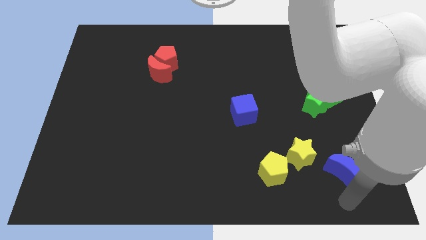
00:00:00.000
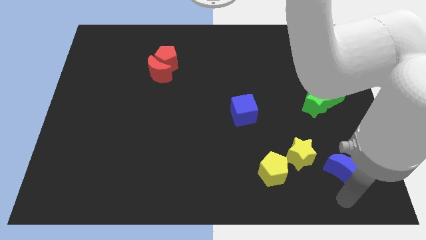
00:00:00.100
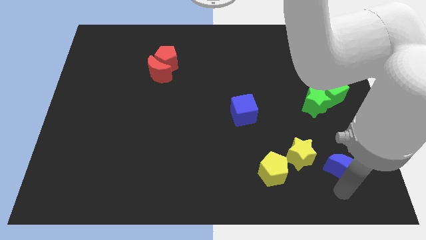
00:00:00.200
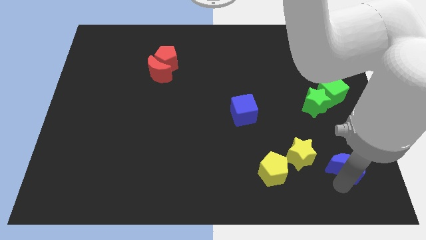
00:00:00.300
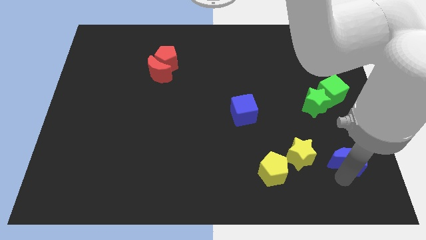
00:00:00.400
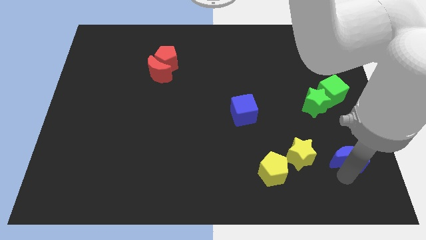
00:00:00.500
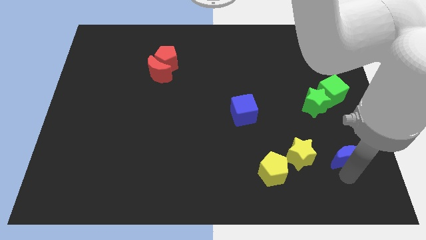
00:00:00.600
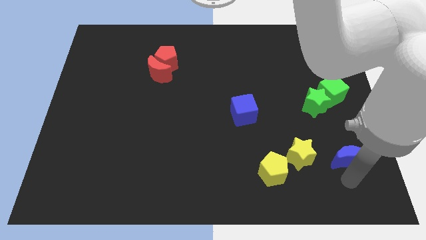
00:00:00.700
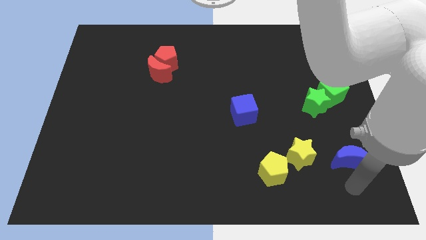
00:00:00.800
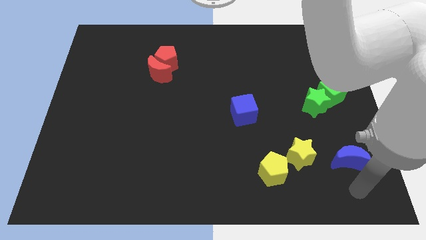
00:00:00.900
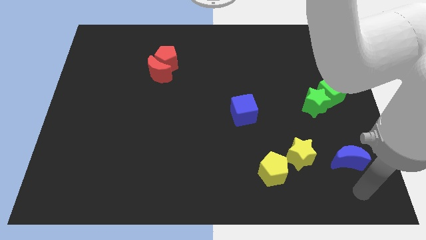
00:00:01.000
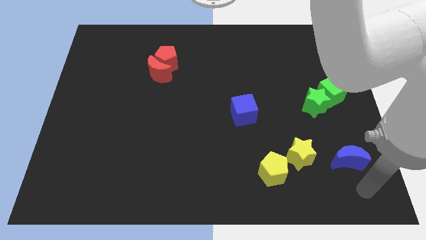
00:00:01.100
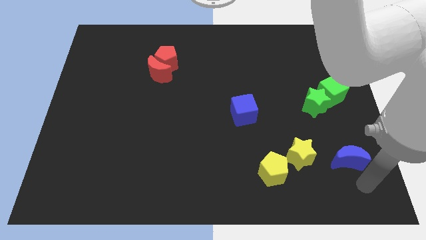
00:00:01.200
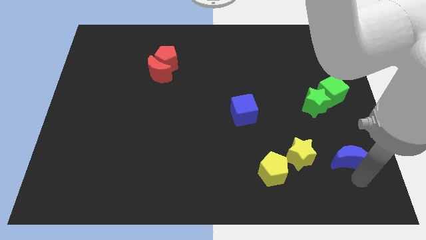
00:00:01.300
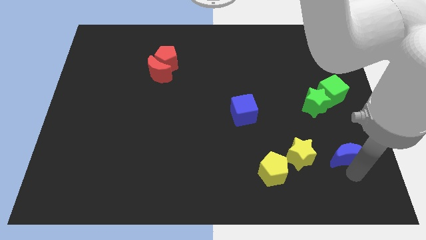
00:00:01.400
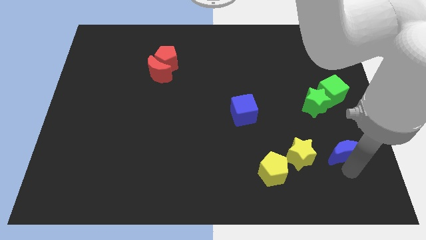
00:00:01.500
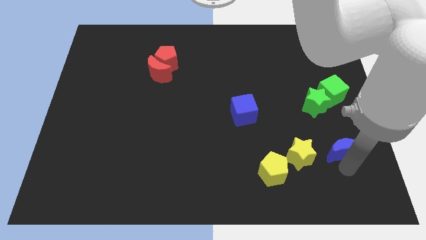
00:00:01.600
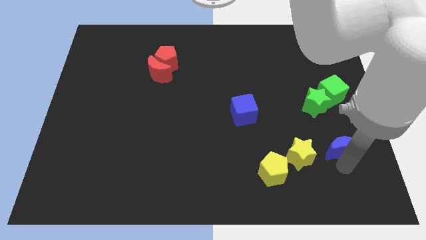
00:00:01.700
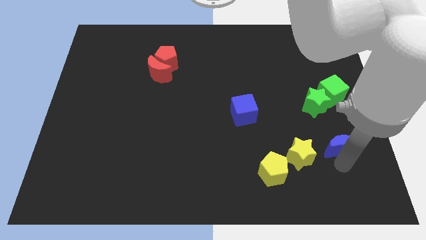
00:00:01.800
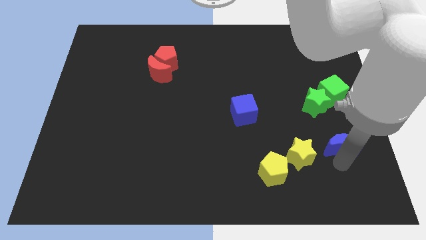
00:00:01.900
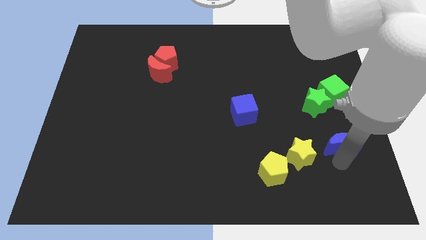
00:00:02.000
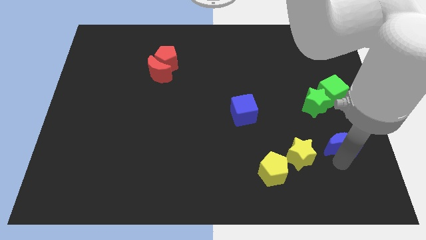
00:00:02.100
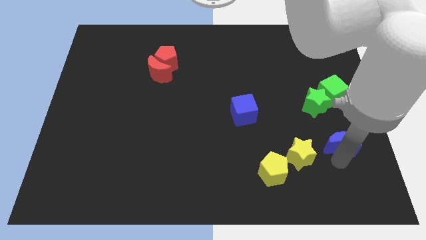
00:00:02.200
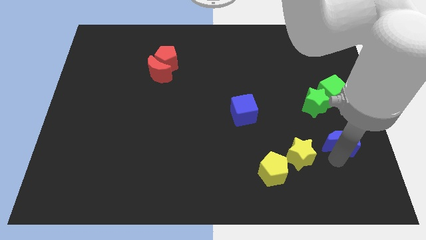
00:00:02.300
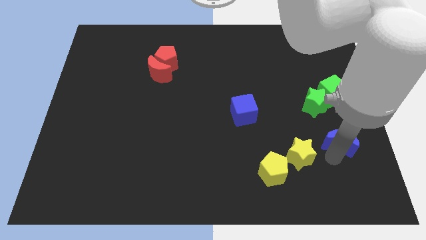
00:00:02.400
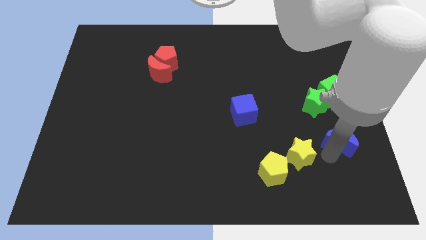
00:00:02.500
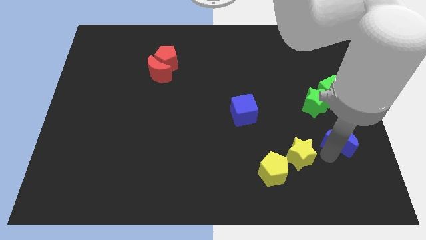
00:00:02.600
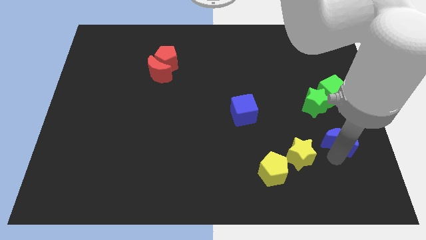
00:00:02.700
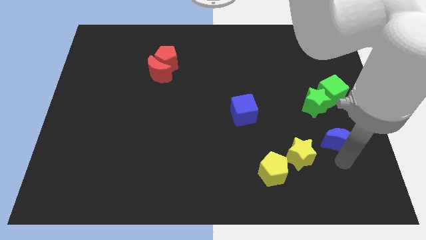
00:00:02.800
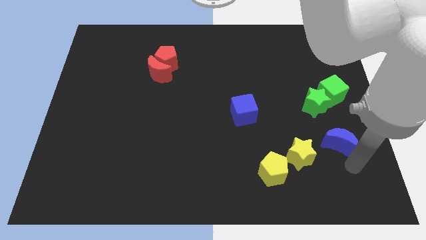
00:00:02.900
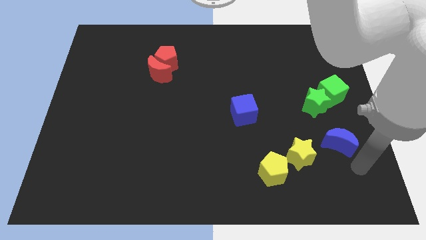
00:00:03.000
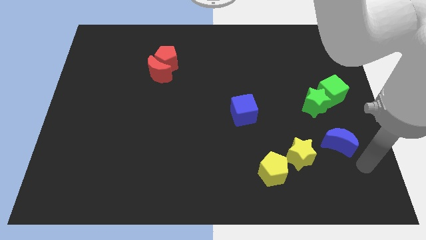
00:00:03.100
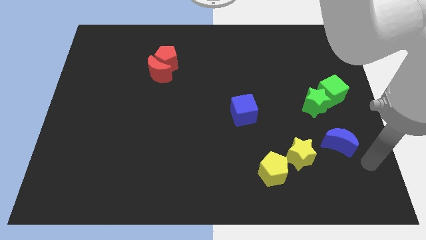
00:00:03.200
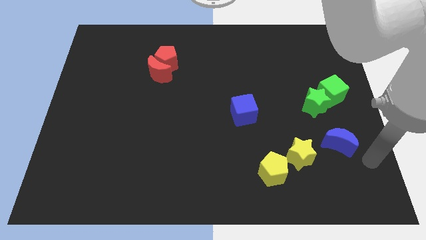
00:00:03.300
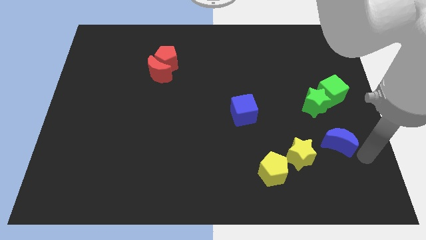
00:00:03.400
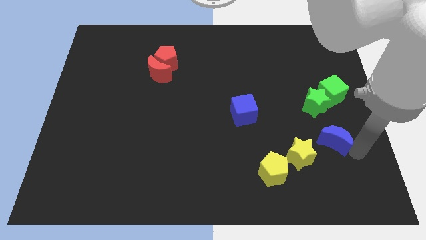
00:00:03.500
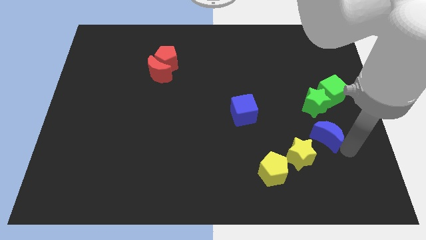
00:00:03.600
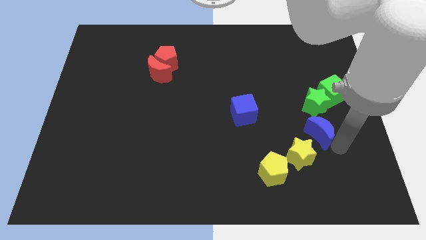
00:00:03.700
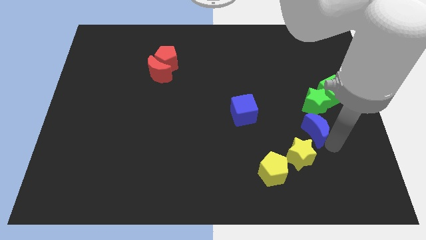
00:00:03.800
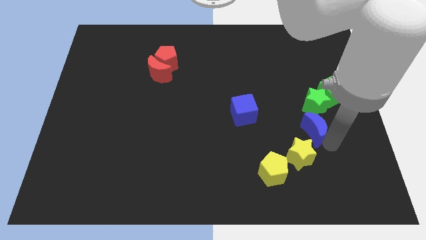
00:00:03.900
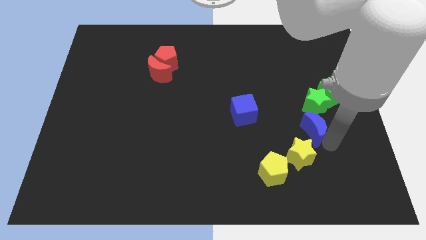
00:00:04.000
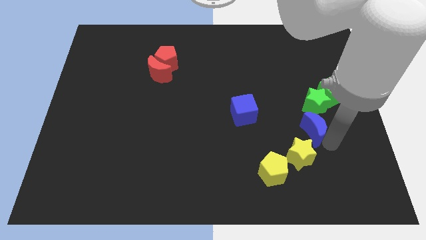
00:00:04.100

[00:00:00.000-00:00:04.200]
place the blue crescent below the green star

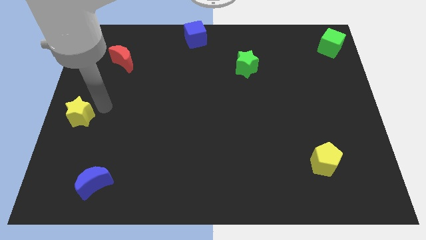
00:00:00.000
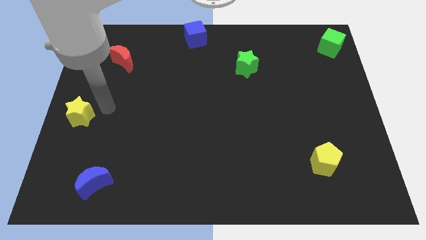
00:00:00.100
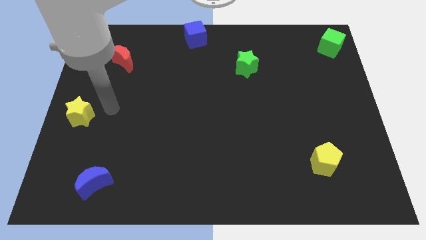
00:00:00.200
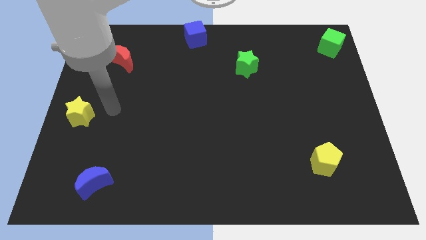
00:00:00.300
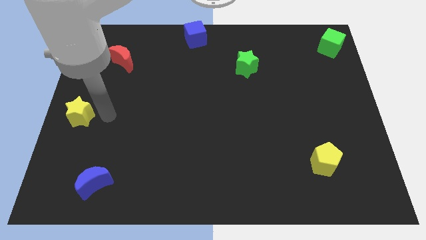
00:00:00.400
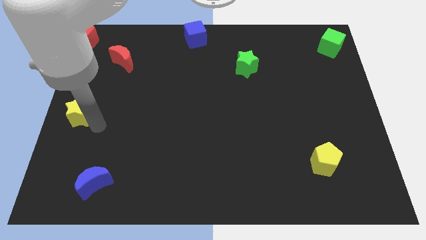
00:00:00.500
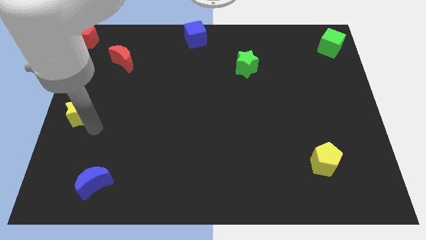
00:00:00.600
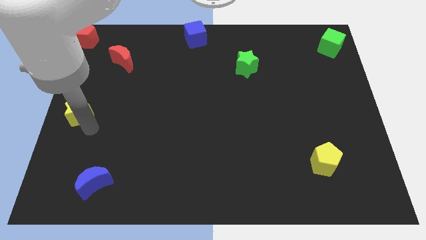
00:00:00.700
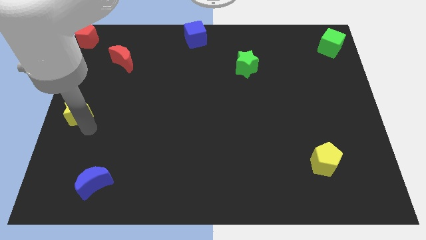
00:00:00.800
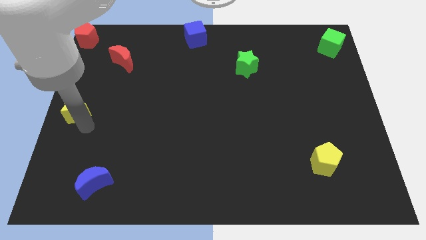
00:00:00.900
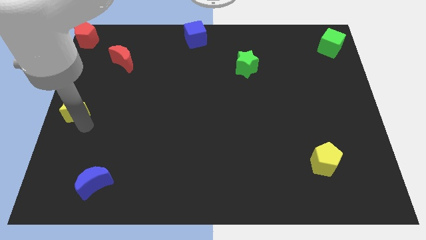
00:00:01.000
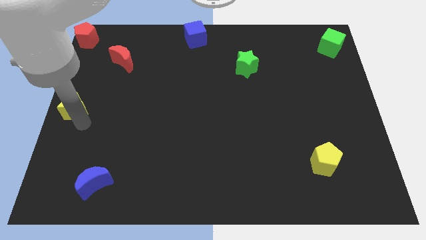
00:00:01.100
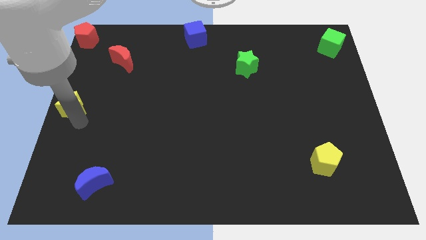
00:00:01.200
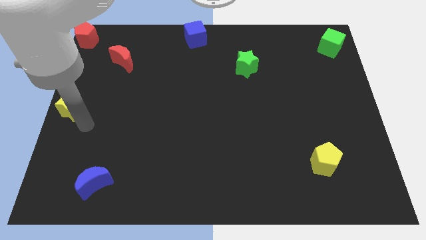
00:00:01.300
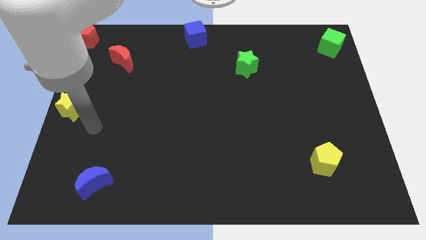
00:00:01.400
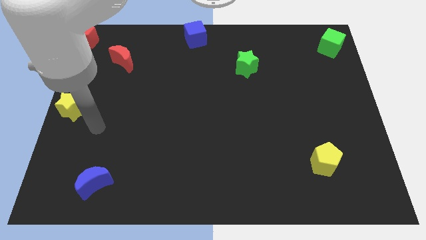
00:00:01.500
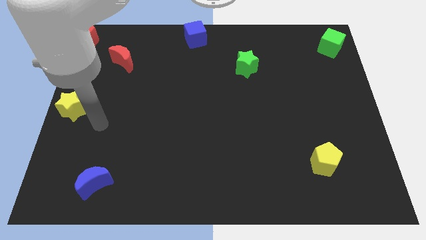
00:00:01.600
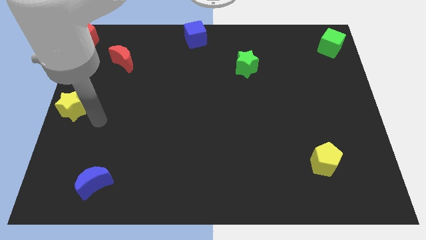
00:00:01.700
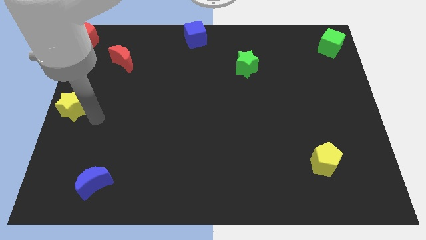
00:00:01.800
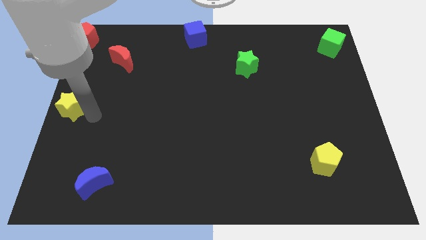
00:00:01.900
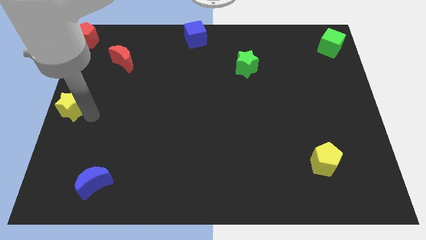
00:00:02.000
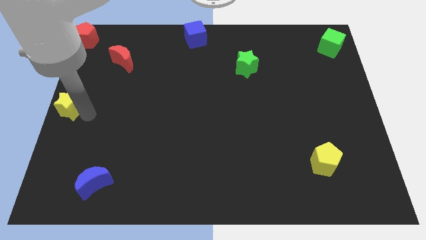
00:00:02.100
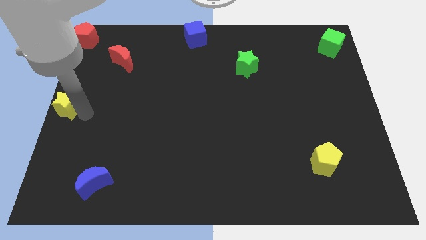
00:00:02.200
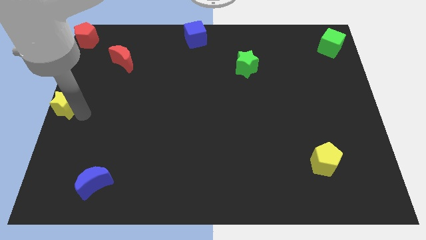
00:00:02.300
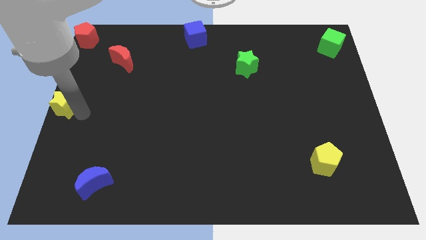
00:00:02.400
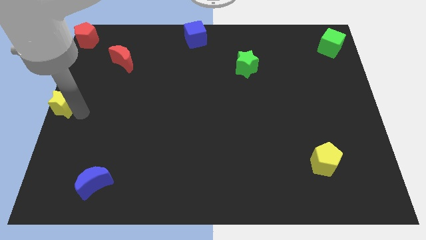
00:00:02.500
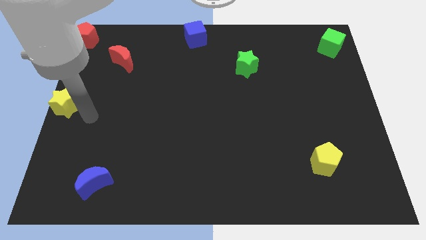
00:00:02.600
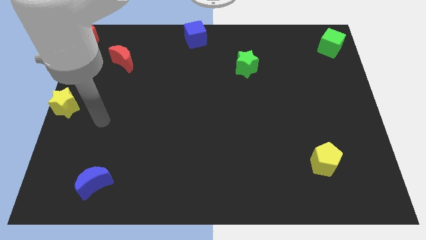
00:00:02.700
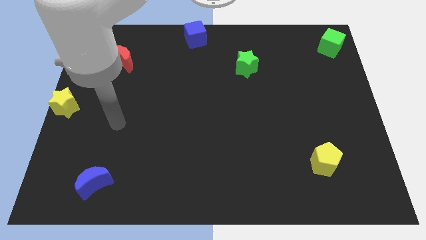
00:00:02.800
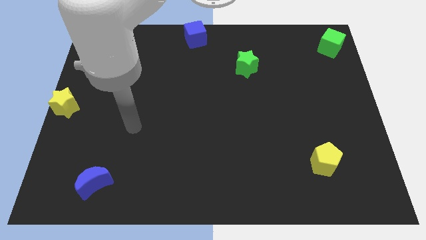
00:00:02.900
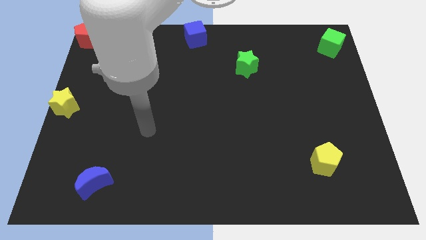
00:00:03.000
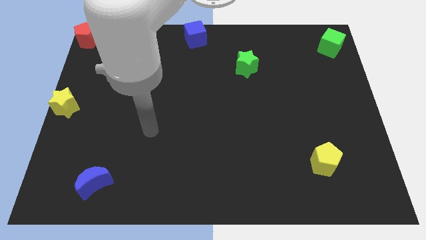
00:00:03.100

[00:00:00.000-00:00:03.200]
move the yellow star to the center left of the board

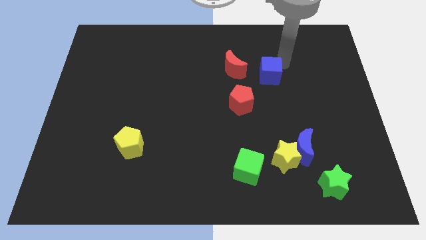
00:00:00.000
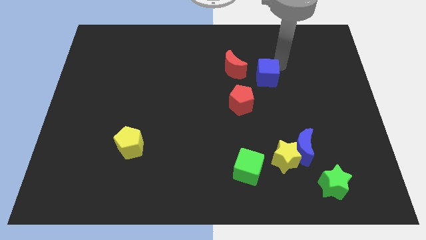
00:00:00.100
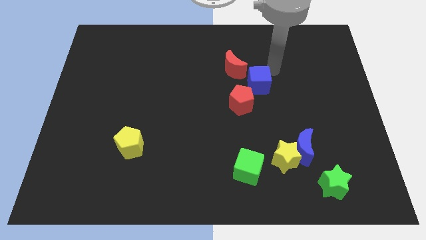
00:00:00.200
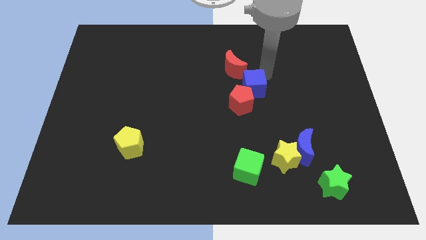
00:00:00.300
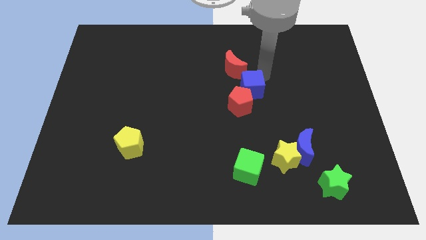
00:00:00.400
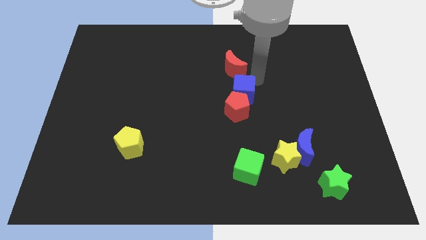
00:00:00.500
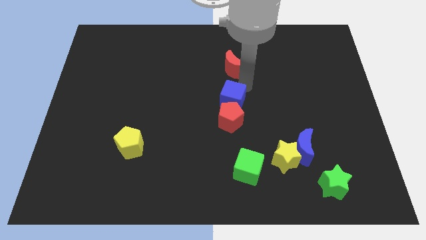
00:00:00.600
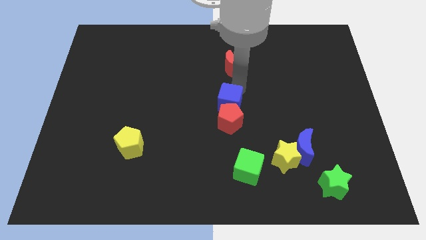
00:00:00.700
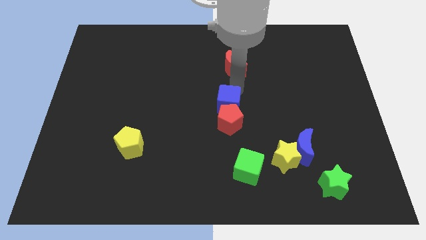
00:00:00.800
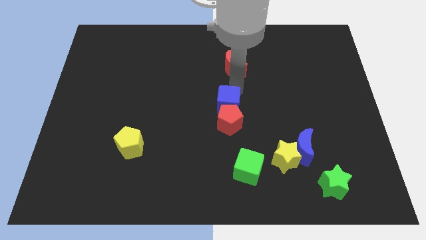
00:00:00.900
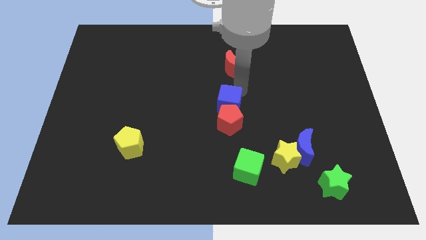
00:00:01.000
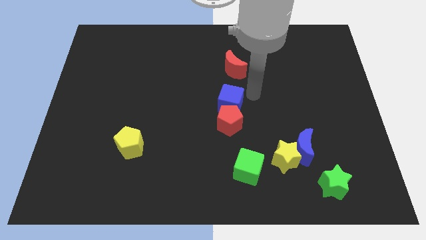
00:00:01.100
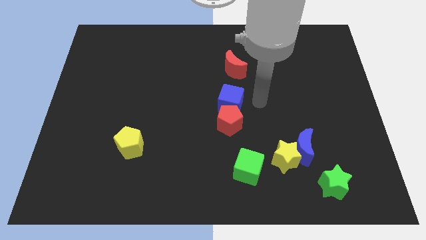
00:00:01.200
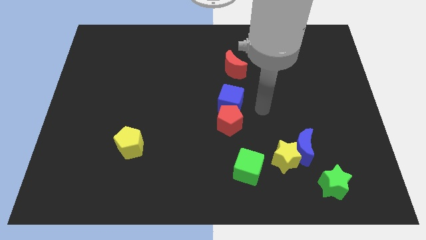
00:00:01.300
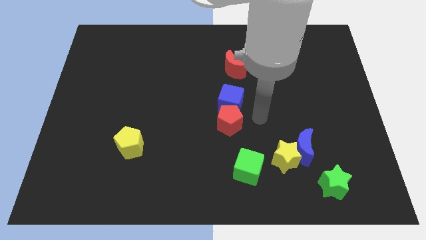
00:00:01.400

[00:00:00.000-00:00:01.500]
move the blue cube into the red pentagon towards the center of the board

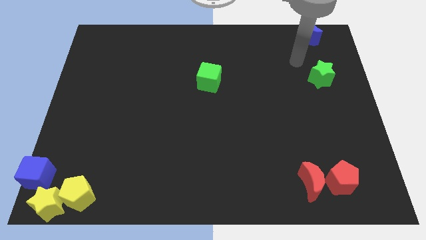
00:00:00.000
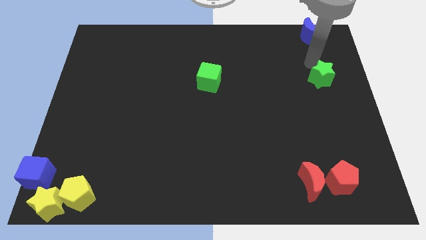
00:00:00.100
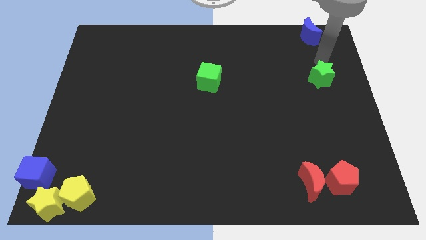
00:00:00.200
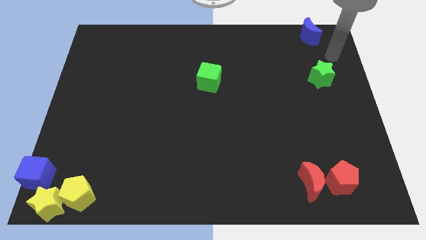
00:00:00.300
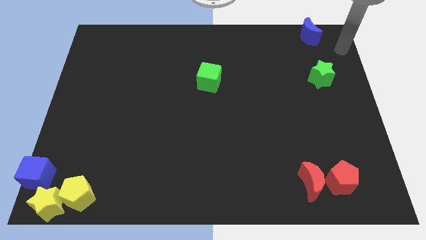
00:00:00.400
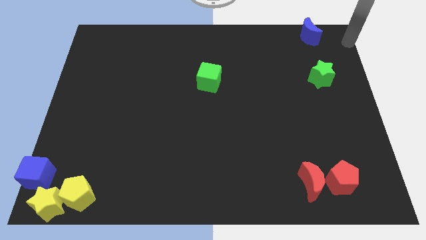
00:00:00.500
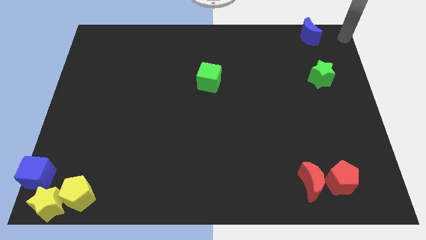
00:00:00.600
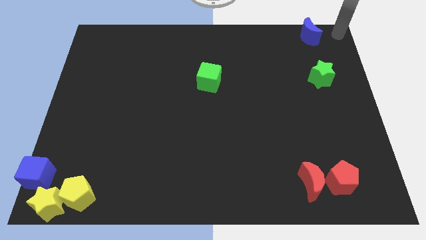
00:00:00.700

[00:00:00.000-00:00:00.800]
push arm at top right corner
